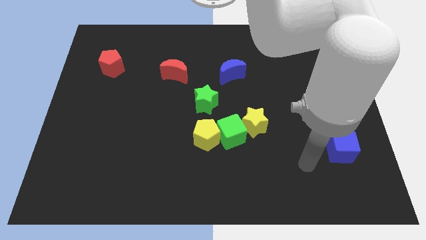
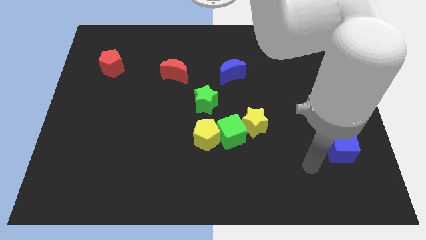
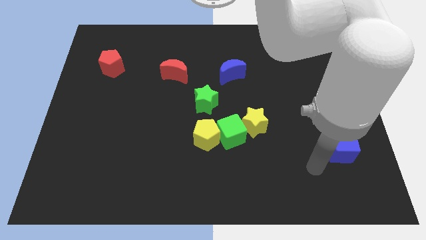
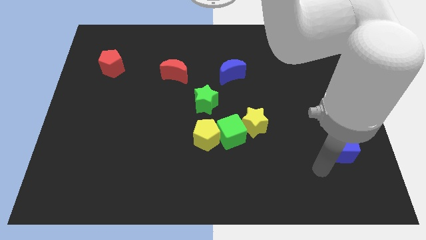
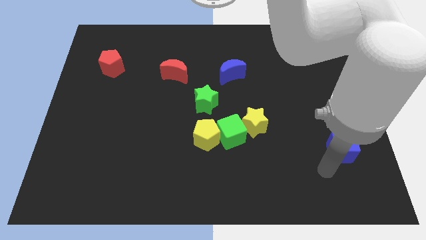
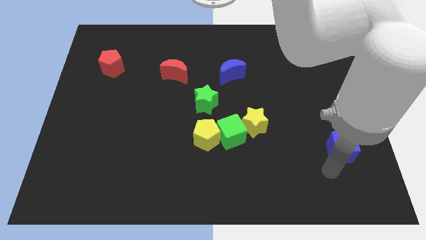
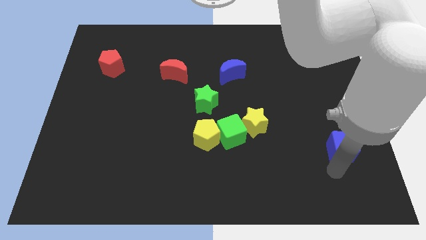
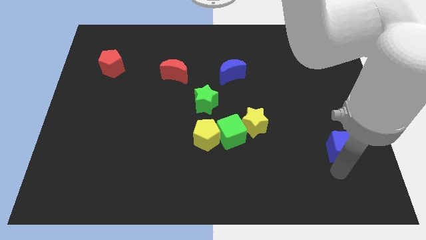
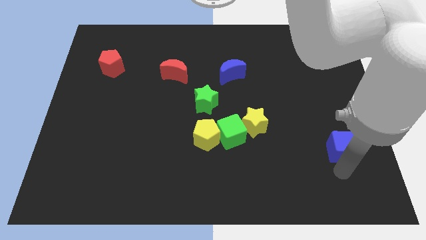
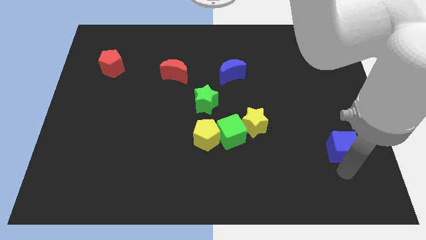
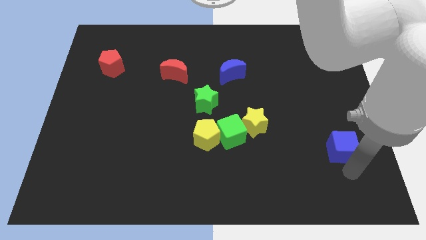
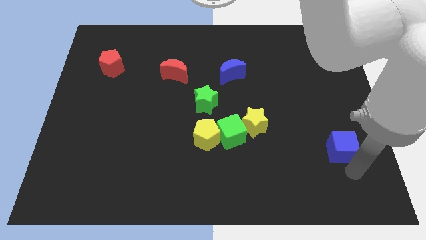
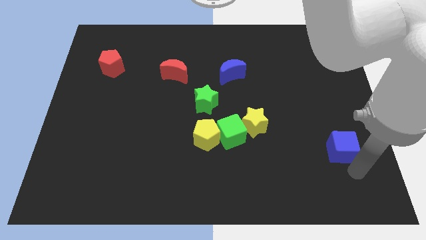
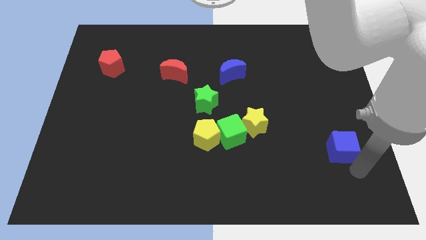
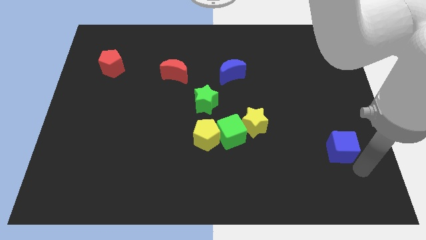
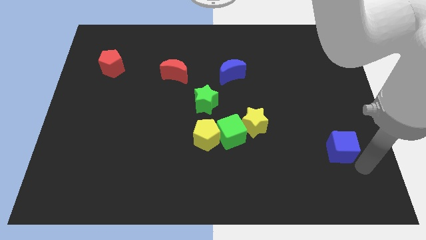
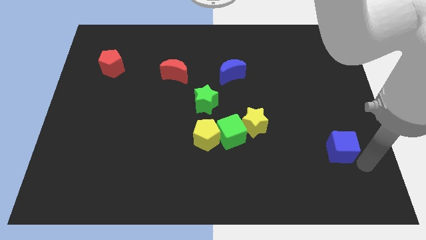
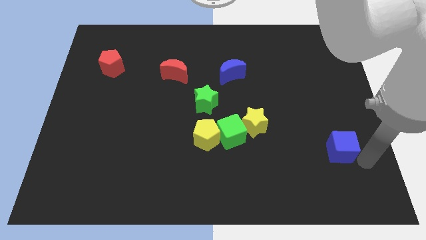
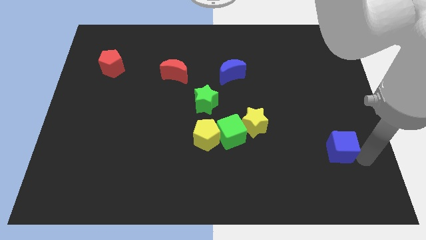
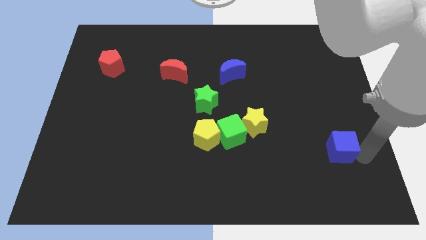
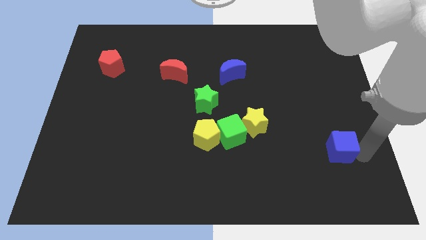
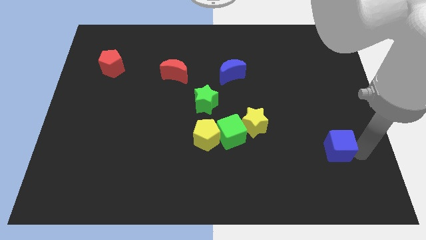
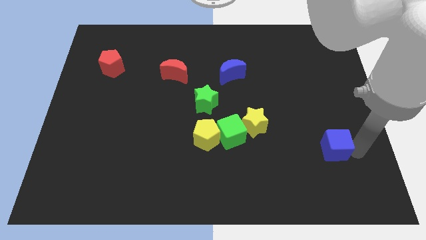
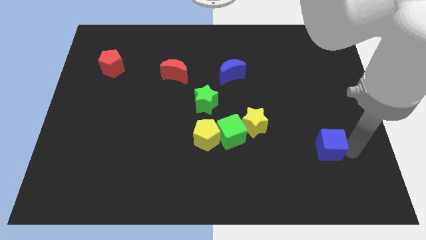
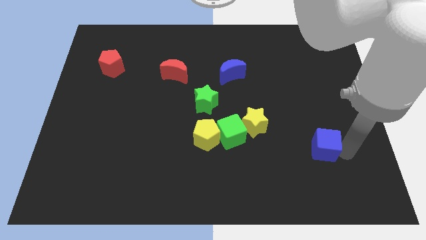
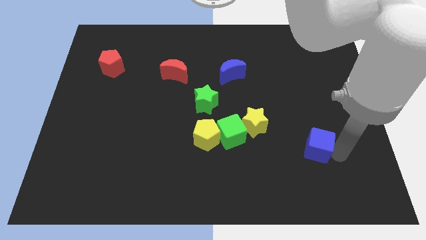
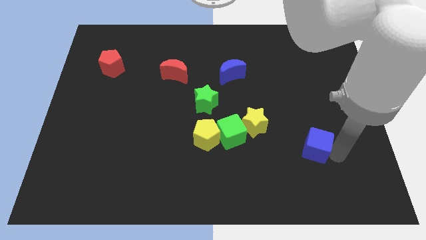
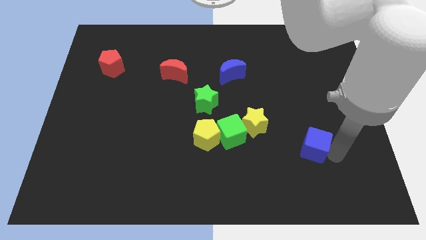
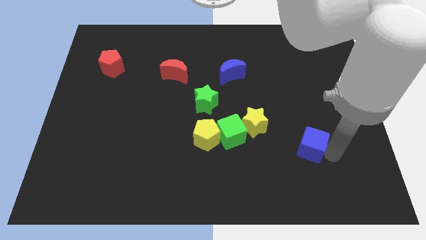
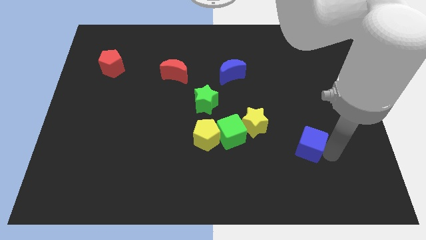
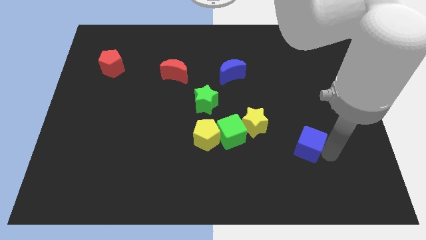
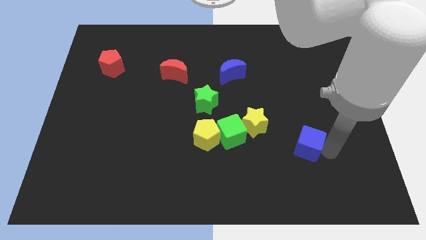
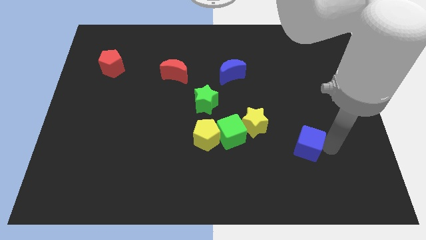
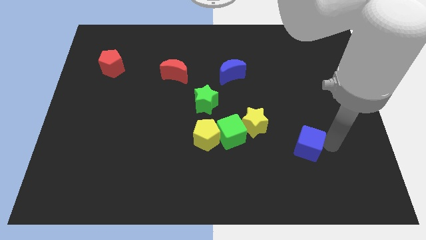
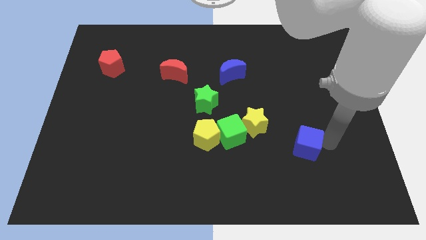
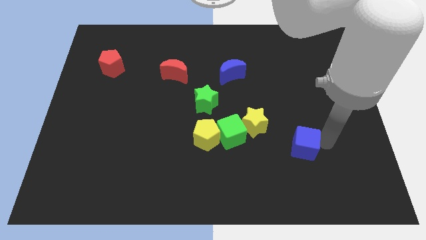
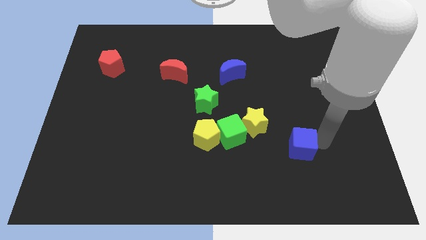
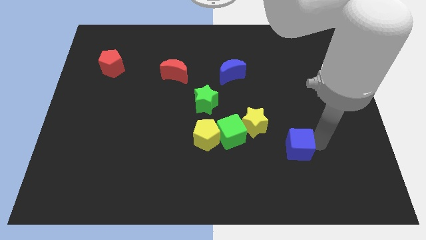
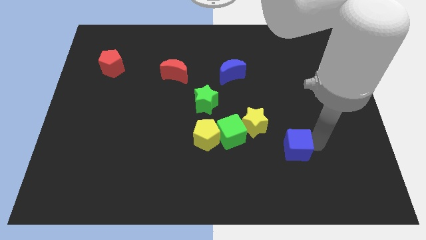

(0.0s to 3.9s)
move the blue cube slightly towards left

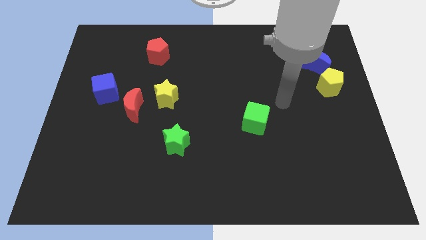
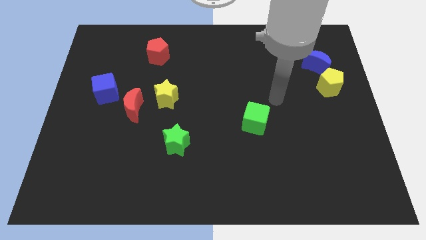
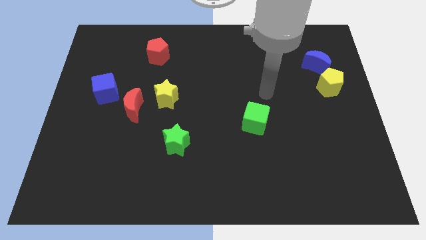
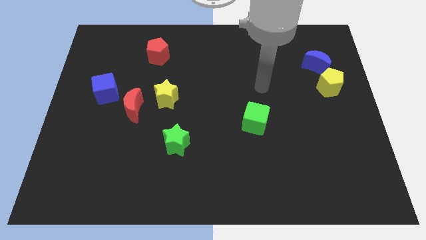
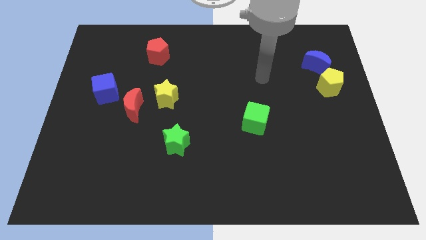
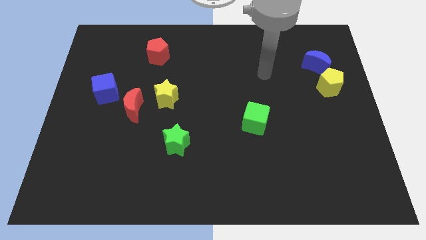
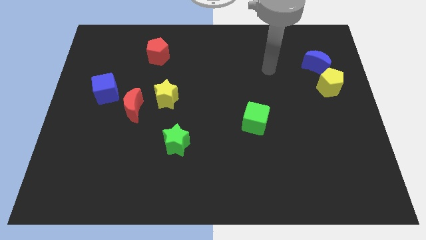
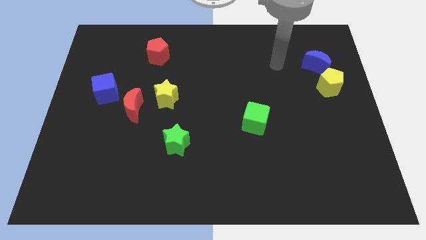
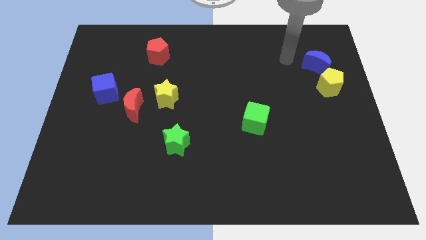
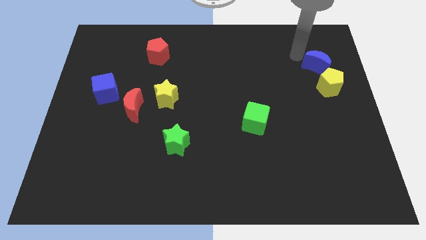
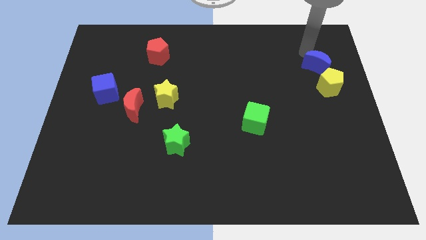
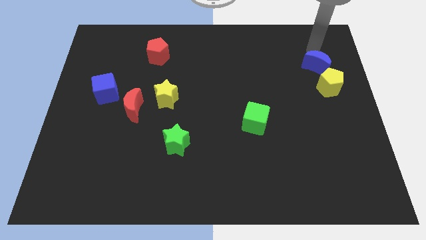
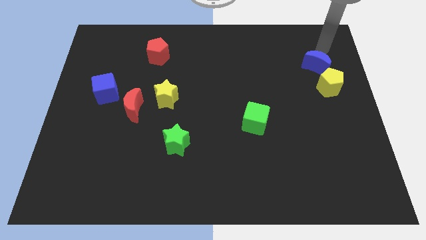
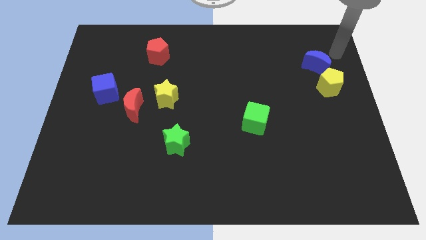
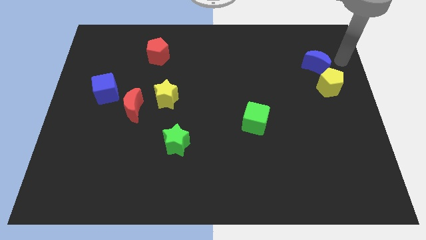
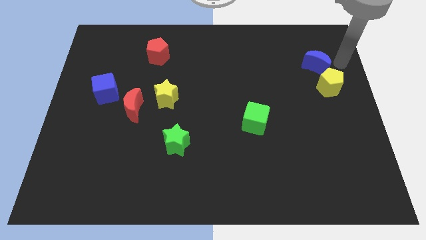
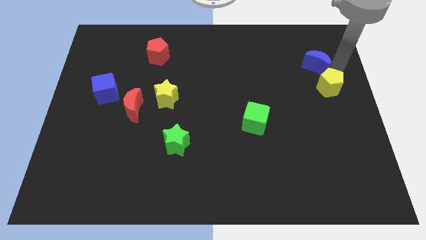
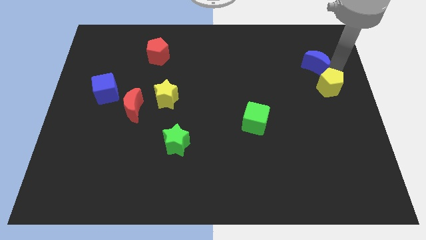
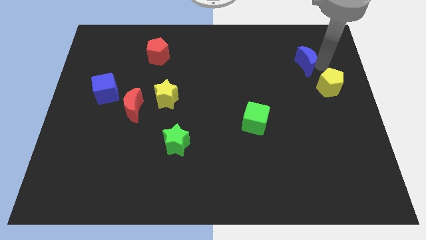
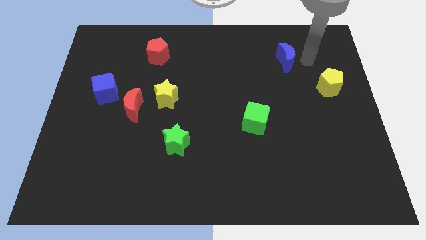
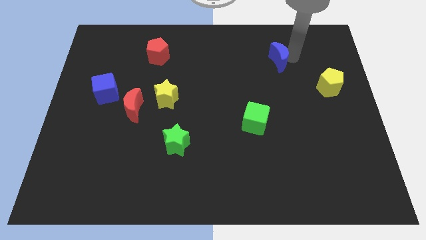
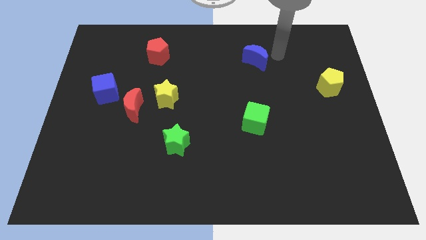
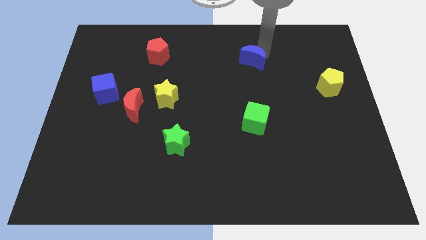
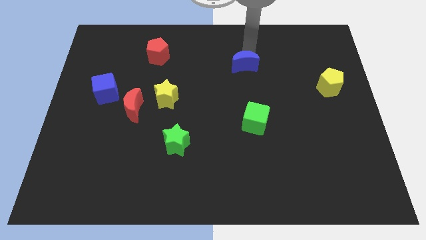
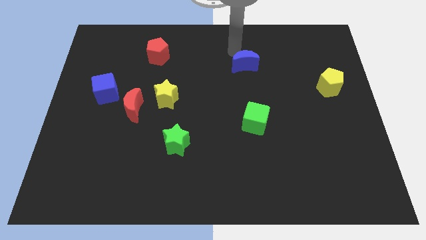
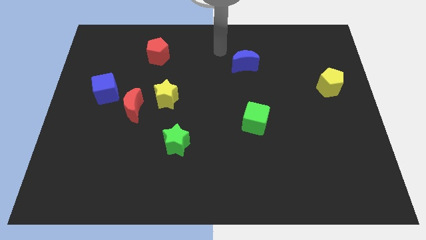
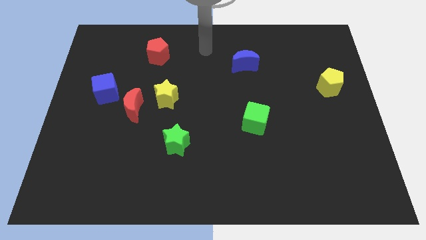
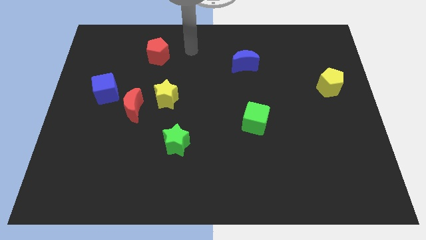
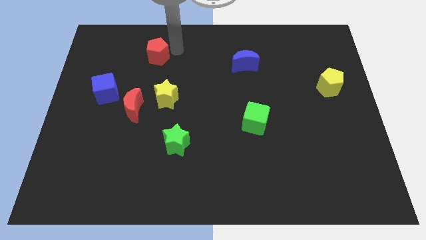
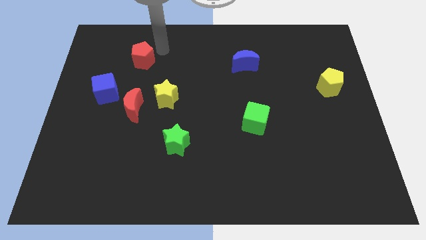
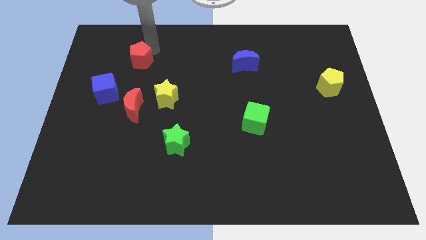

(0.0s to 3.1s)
slide the blue moon above green cube

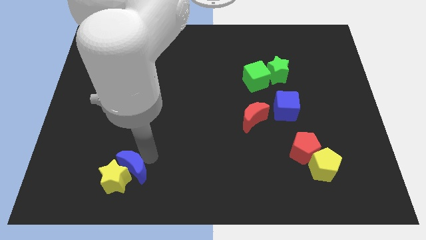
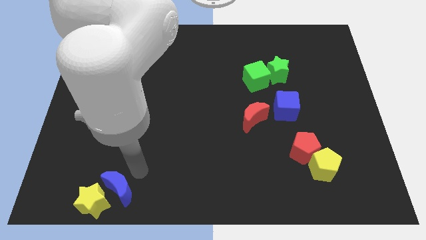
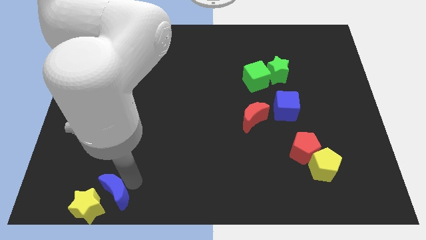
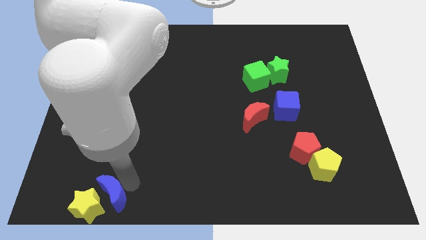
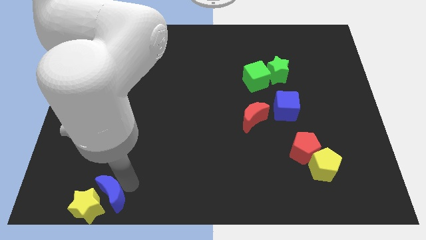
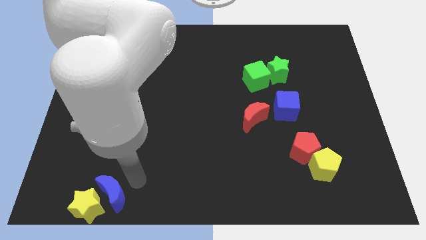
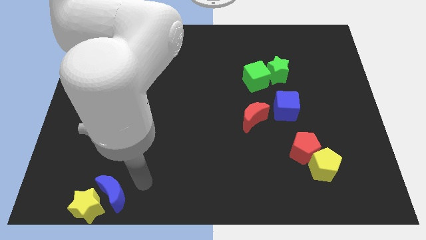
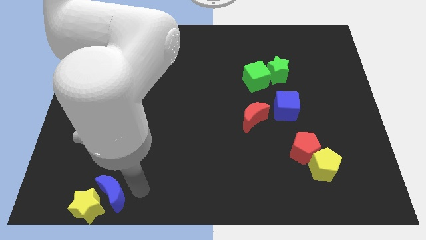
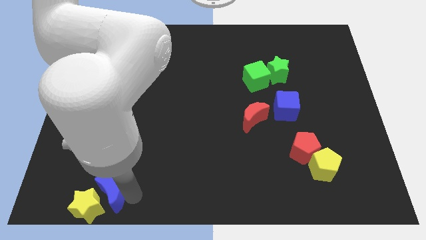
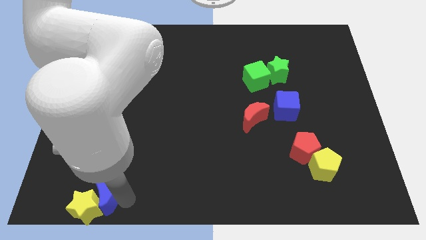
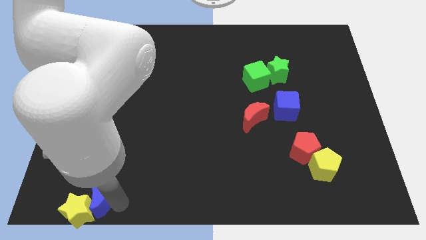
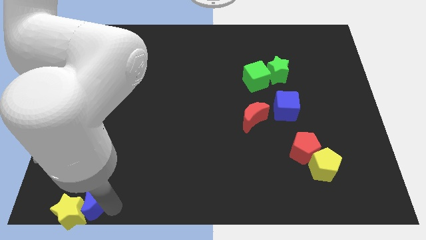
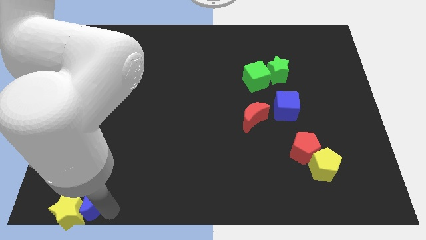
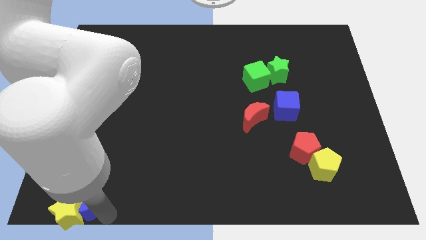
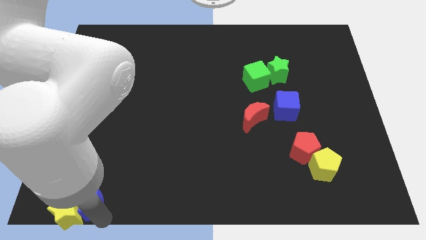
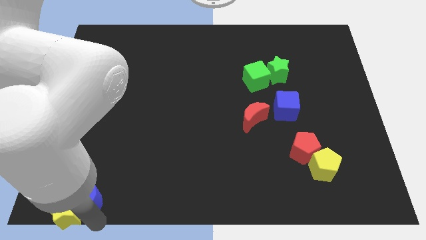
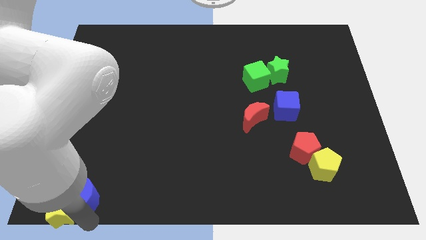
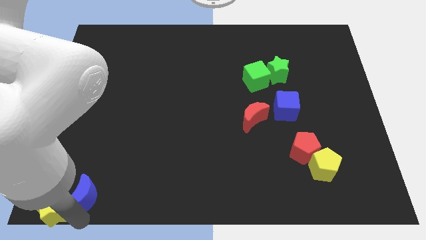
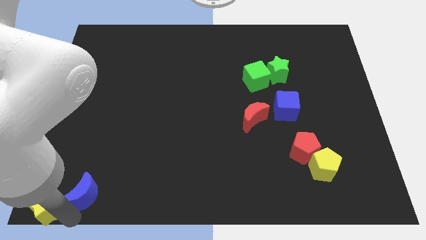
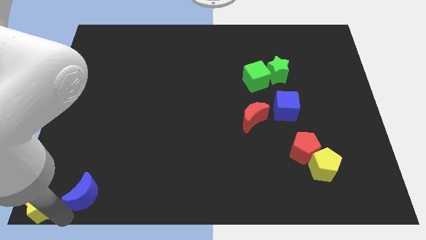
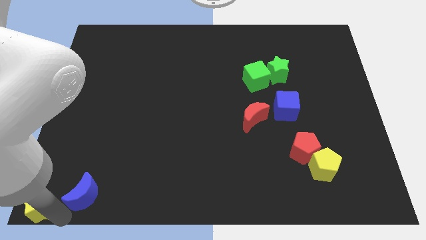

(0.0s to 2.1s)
move the yellow star and the blue moon away from each other
